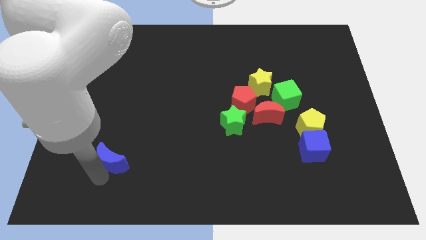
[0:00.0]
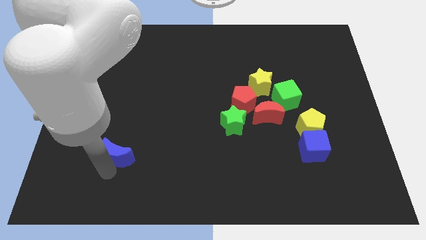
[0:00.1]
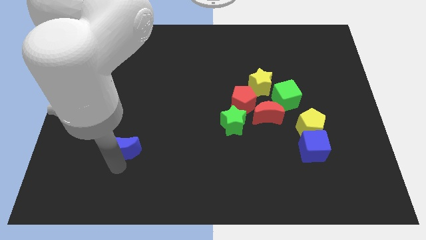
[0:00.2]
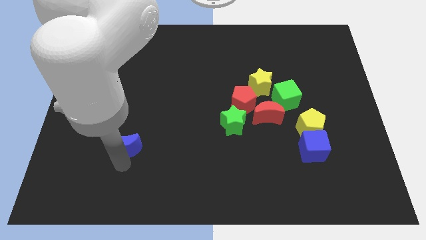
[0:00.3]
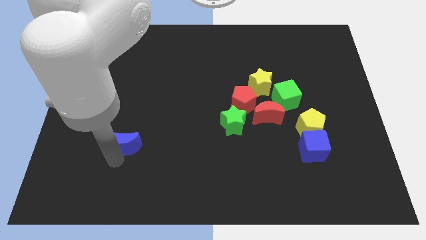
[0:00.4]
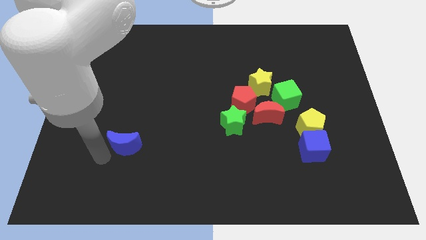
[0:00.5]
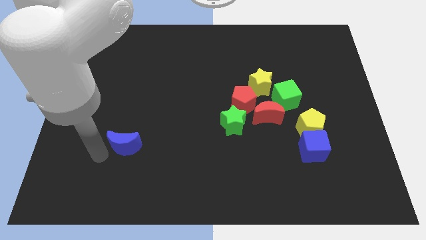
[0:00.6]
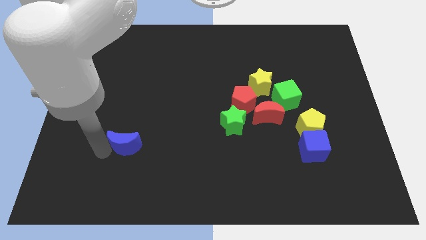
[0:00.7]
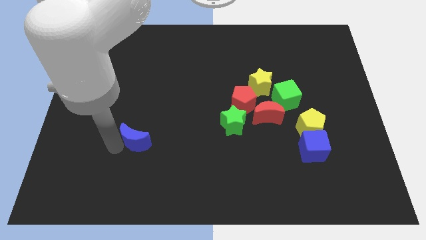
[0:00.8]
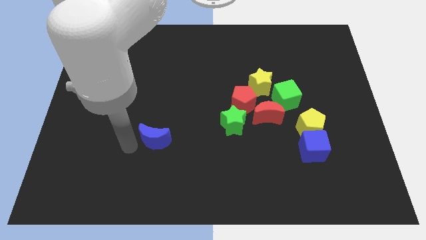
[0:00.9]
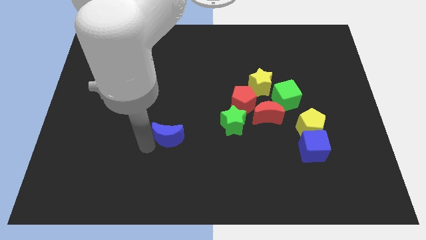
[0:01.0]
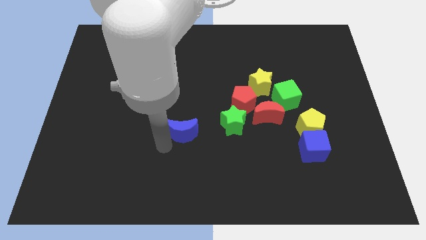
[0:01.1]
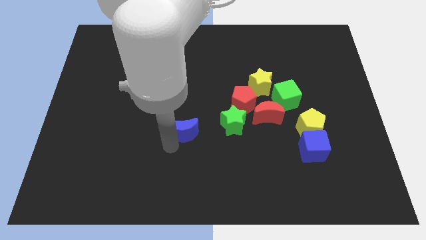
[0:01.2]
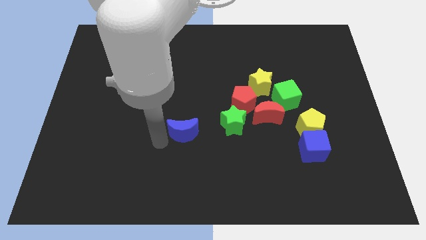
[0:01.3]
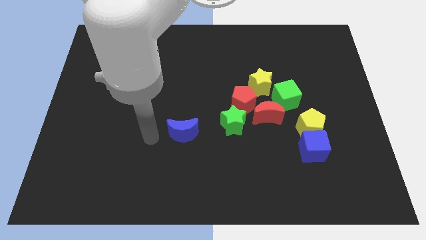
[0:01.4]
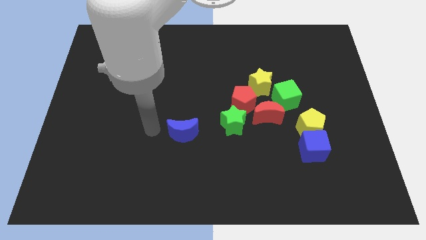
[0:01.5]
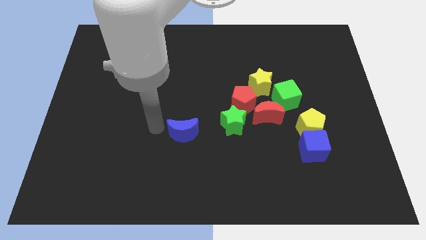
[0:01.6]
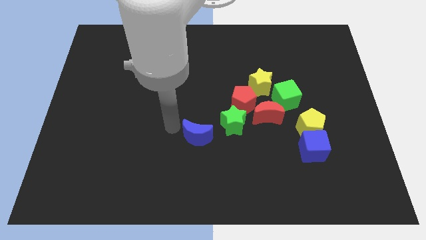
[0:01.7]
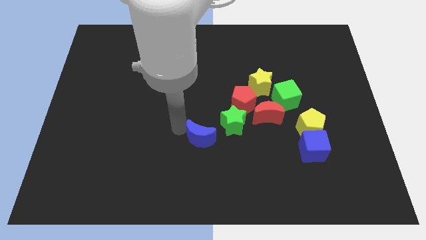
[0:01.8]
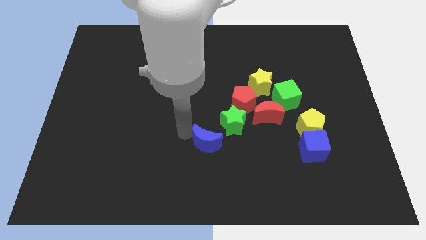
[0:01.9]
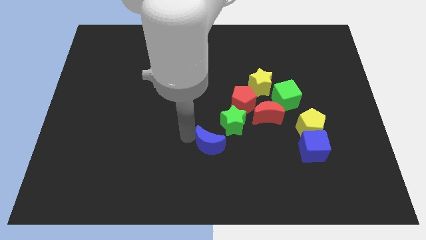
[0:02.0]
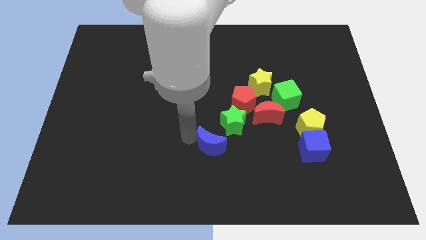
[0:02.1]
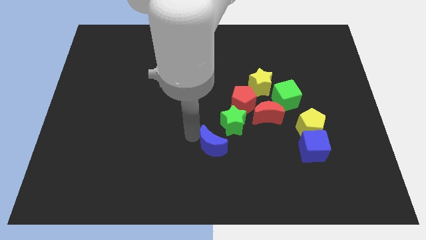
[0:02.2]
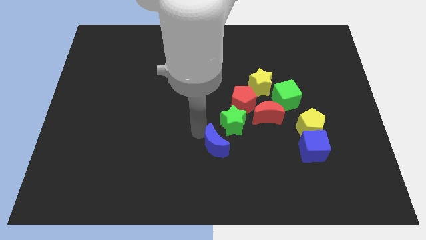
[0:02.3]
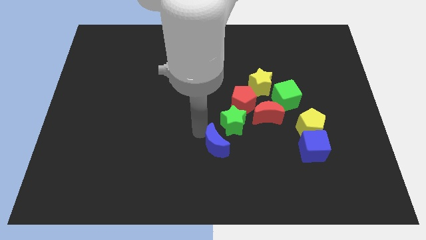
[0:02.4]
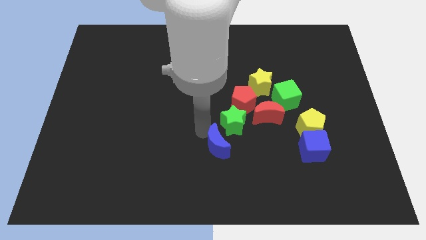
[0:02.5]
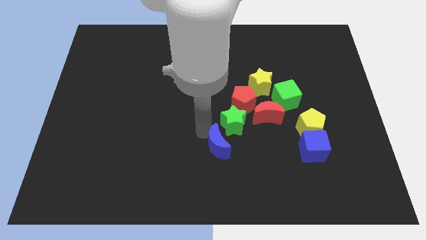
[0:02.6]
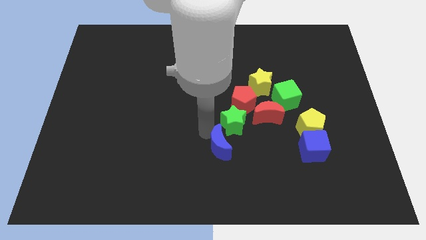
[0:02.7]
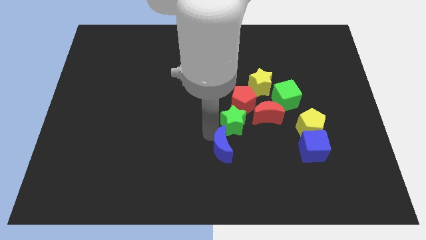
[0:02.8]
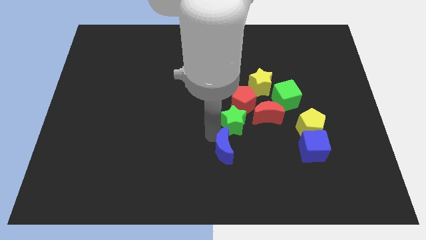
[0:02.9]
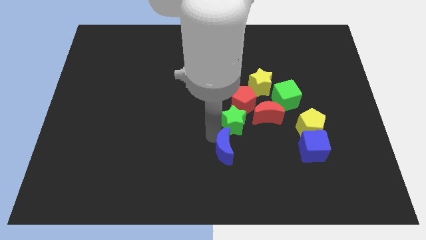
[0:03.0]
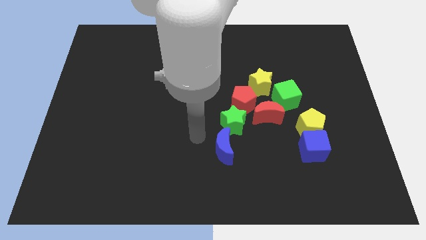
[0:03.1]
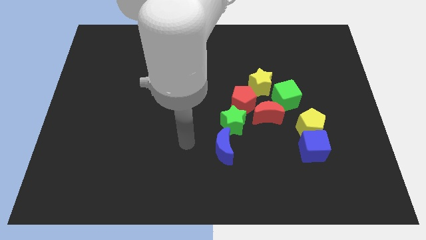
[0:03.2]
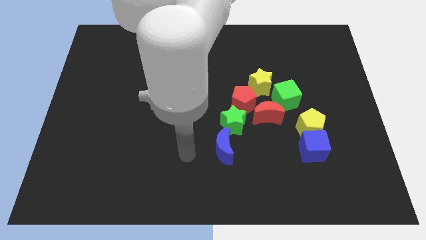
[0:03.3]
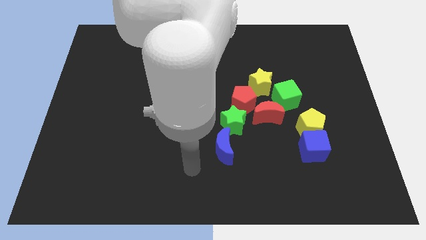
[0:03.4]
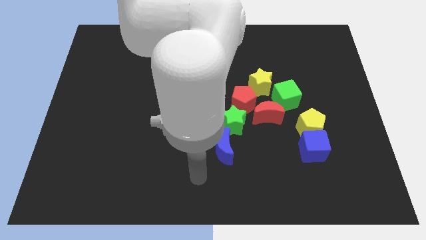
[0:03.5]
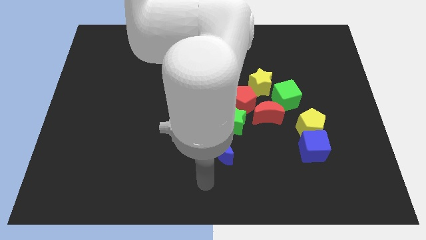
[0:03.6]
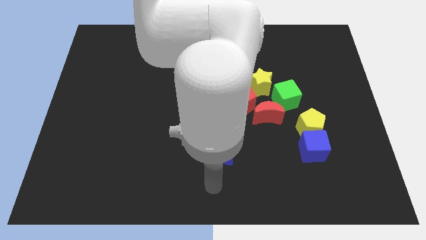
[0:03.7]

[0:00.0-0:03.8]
place the blue moon diagonally bottom left to green star

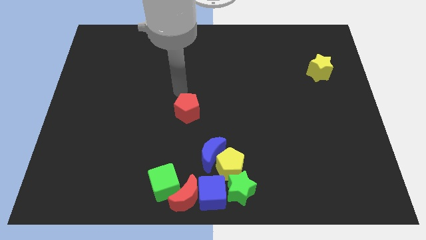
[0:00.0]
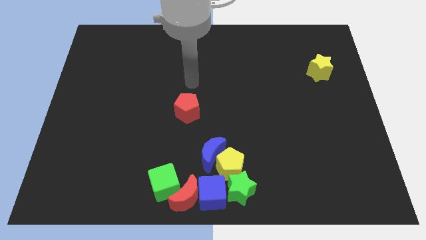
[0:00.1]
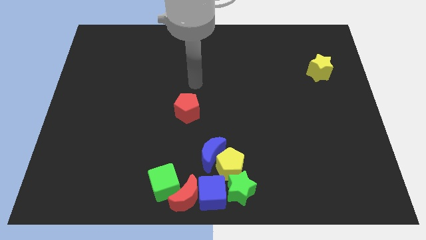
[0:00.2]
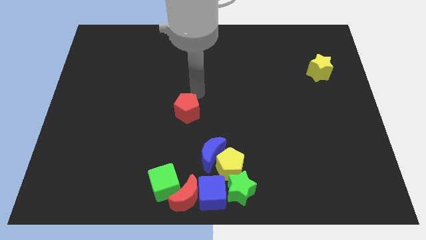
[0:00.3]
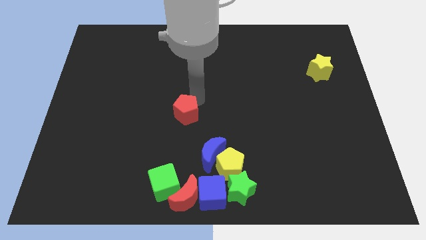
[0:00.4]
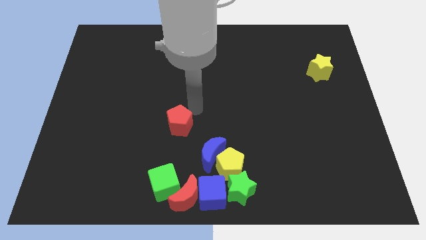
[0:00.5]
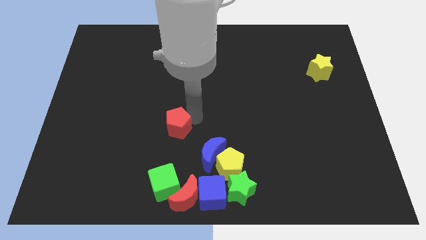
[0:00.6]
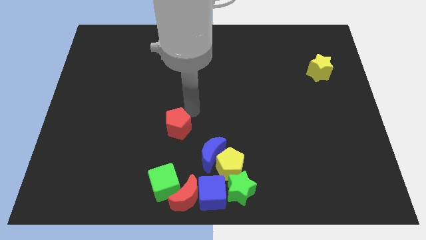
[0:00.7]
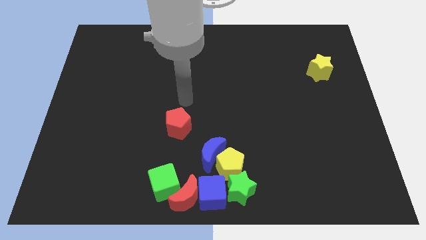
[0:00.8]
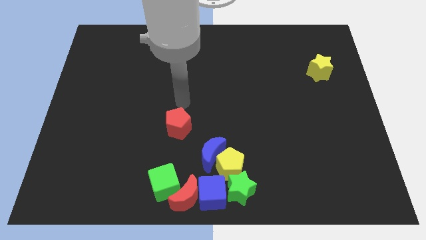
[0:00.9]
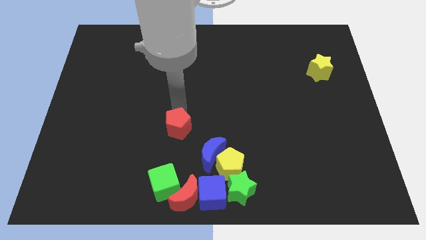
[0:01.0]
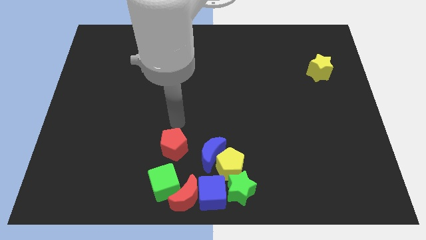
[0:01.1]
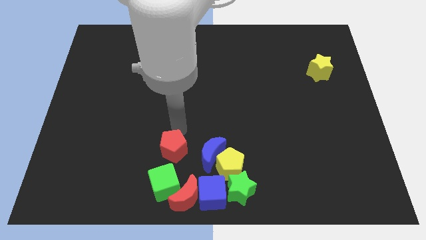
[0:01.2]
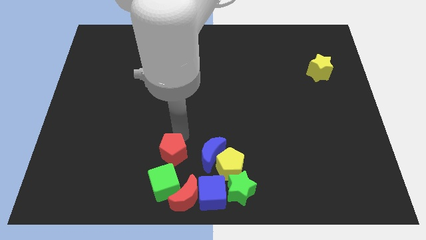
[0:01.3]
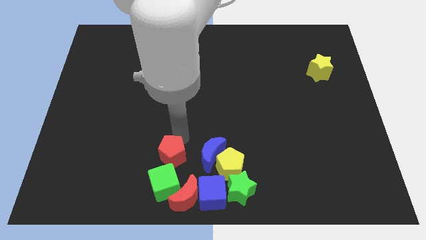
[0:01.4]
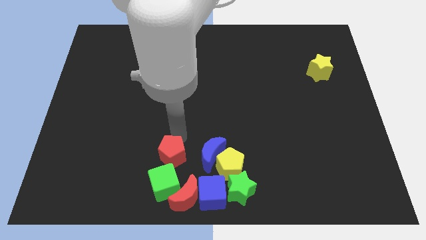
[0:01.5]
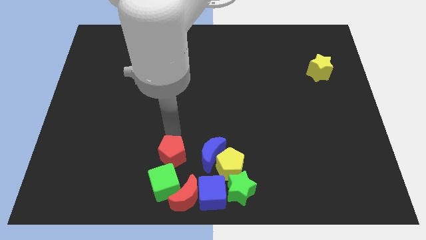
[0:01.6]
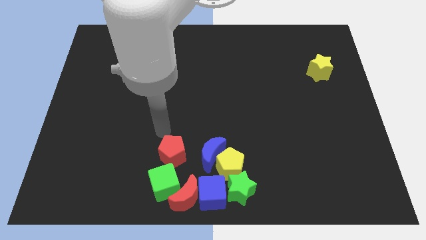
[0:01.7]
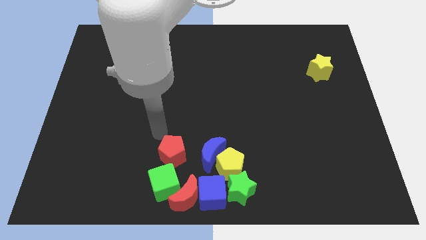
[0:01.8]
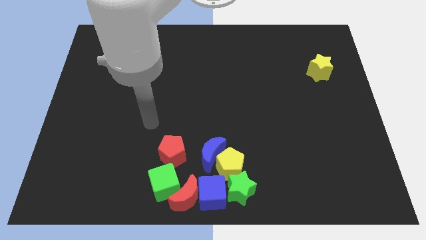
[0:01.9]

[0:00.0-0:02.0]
move the red pentagon above the green cube

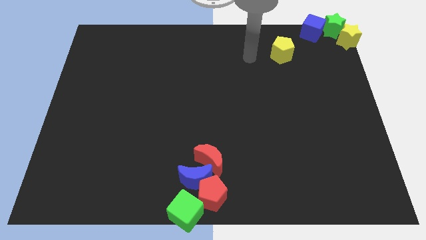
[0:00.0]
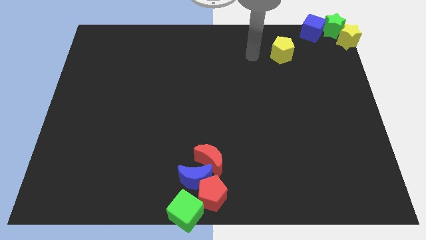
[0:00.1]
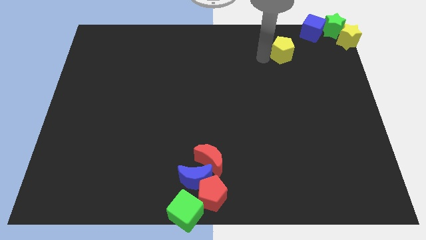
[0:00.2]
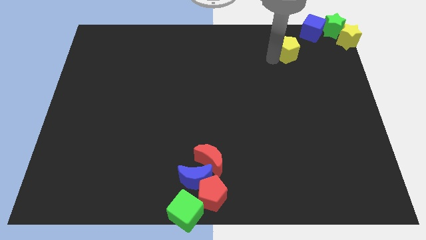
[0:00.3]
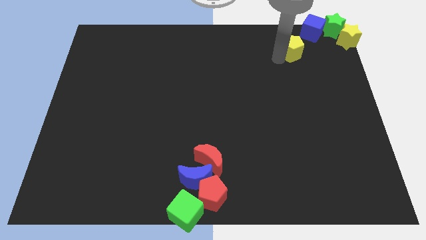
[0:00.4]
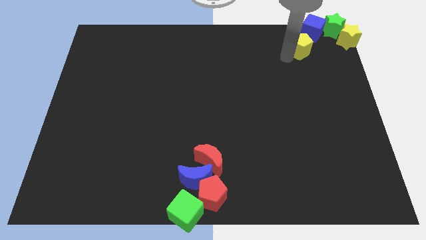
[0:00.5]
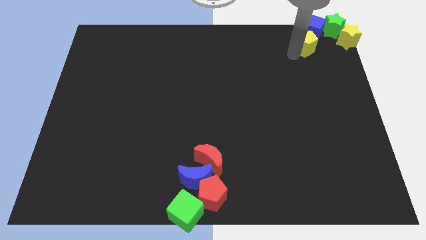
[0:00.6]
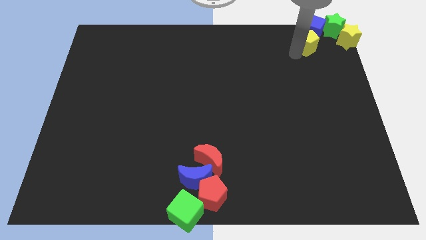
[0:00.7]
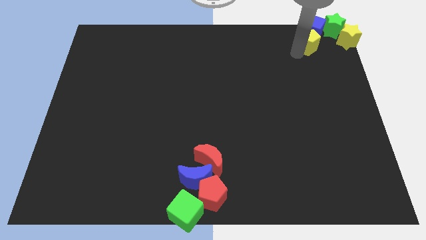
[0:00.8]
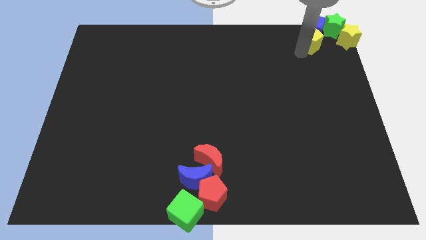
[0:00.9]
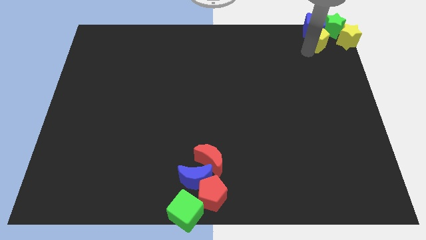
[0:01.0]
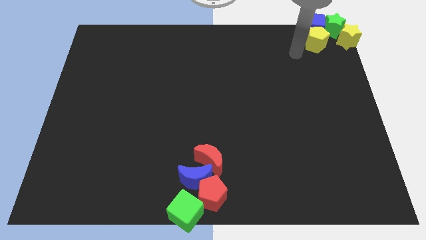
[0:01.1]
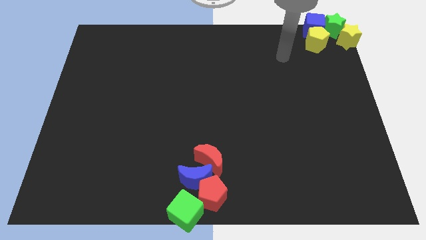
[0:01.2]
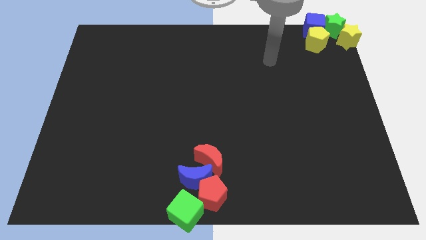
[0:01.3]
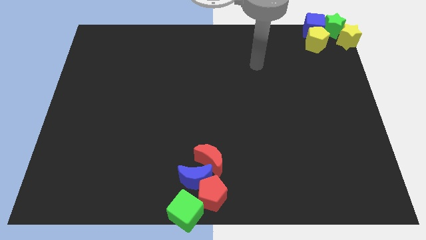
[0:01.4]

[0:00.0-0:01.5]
move the yellow pentagon to the bottom of the blue cube

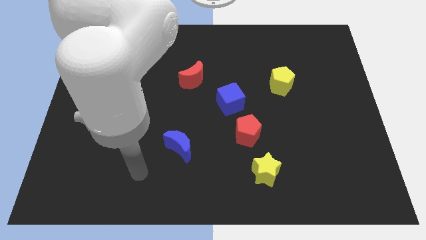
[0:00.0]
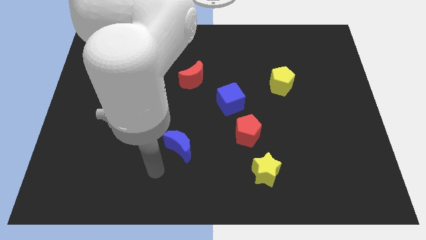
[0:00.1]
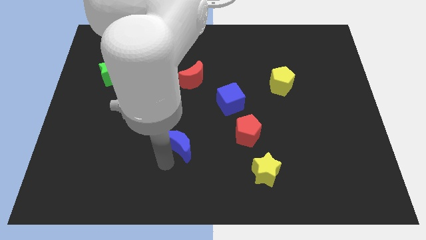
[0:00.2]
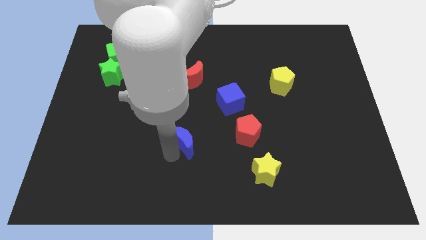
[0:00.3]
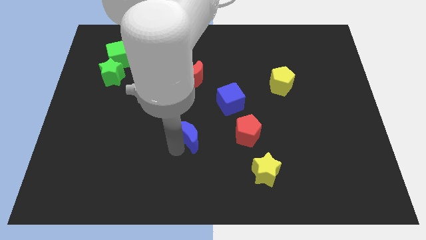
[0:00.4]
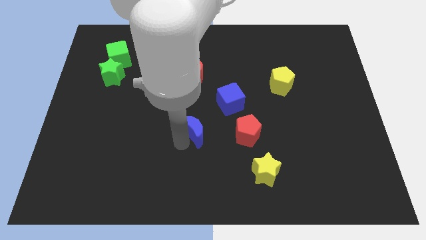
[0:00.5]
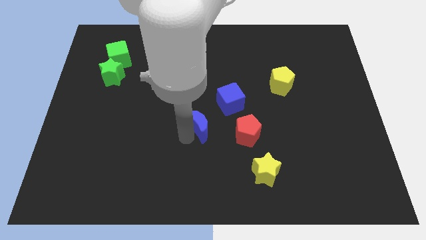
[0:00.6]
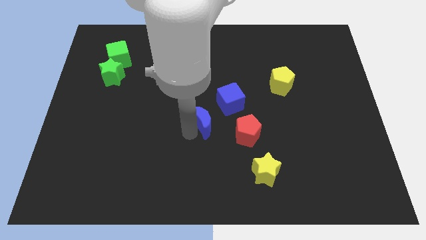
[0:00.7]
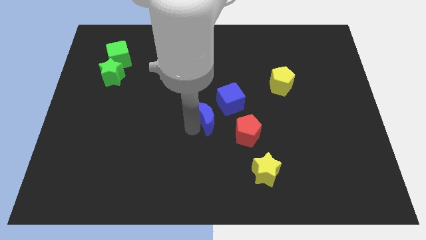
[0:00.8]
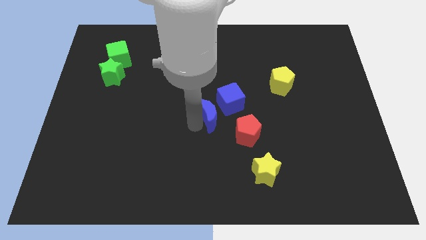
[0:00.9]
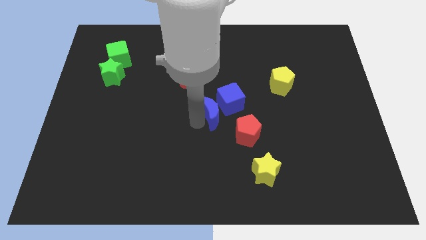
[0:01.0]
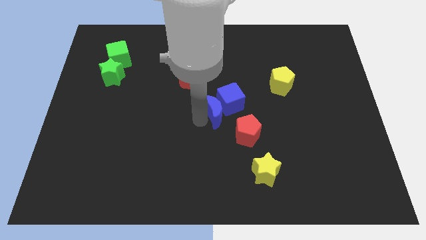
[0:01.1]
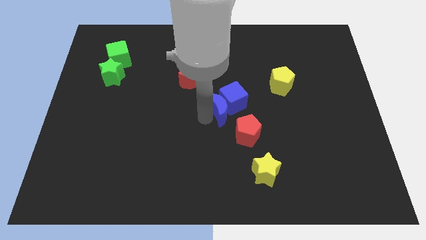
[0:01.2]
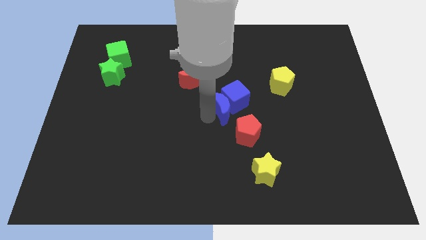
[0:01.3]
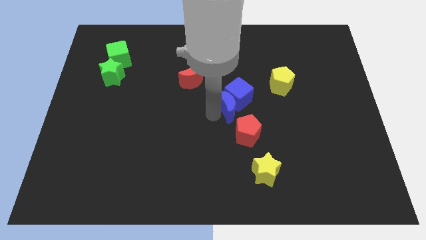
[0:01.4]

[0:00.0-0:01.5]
move the blue crescent into the blue cube

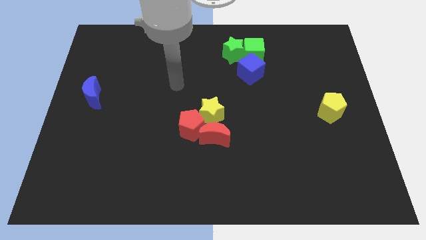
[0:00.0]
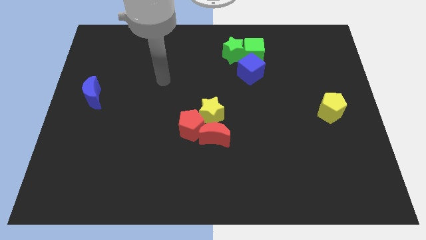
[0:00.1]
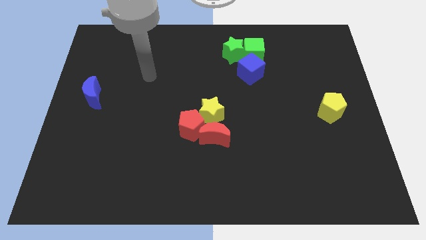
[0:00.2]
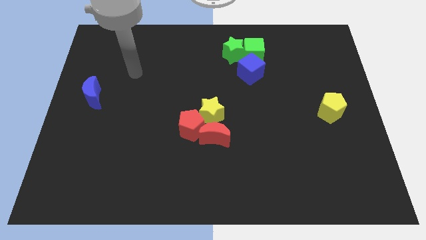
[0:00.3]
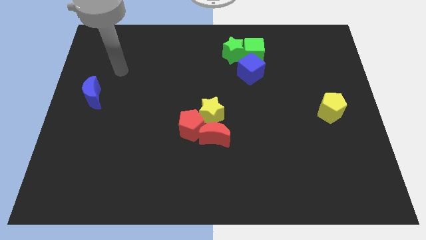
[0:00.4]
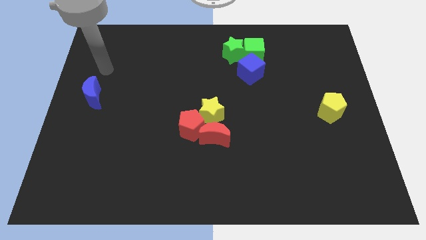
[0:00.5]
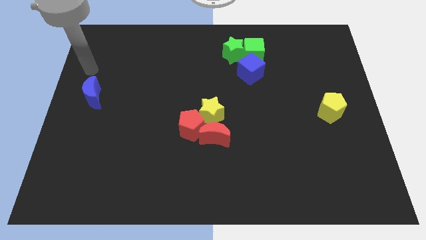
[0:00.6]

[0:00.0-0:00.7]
move the arm towards the top of the blue crescent
